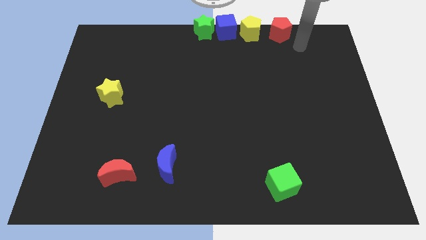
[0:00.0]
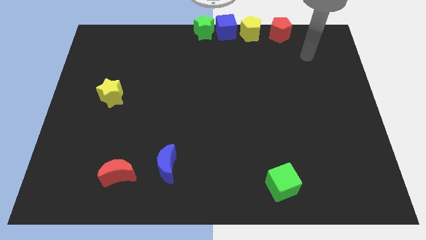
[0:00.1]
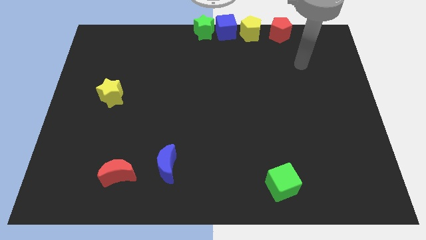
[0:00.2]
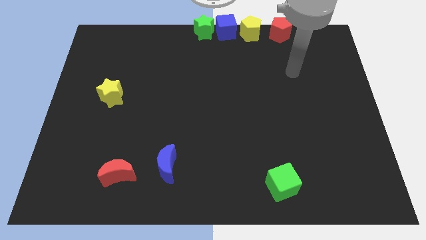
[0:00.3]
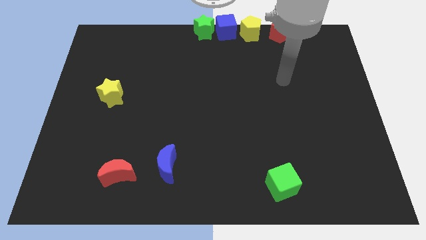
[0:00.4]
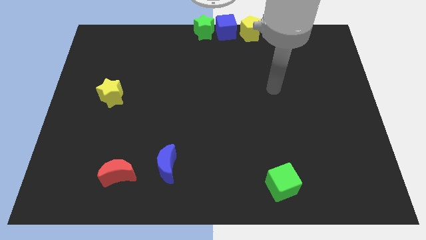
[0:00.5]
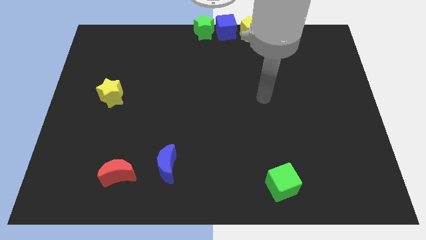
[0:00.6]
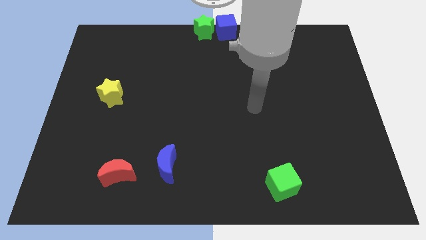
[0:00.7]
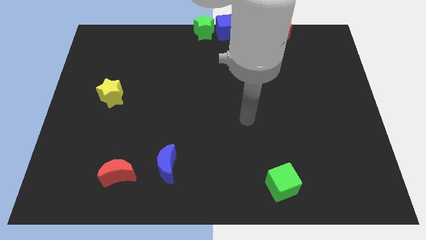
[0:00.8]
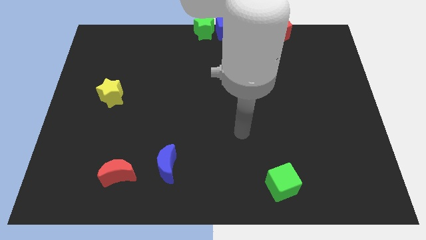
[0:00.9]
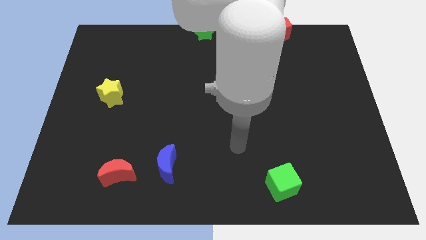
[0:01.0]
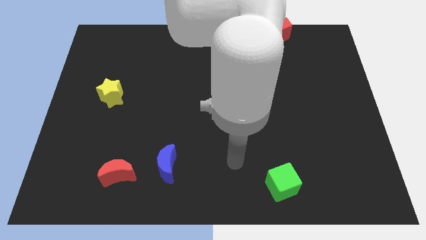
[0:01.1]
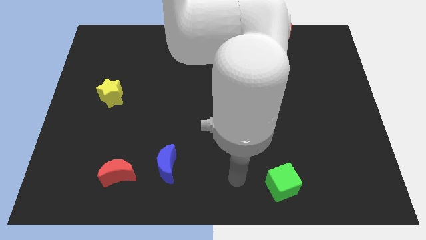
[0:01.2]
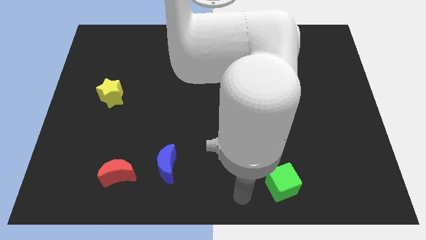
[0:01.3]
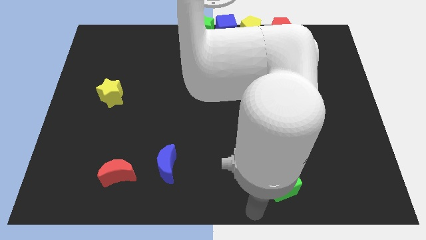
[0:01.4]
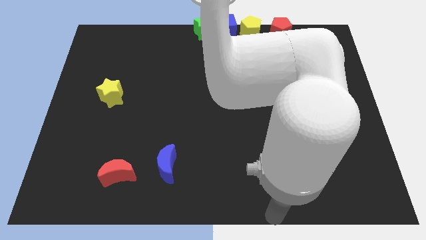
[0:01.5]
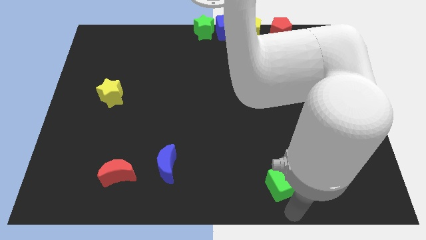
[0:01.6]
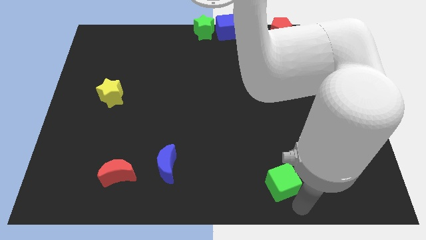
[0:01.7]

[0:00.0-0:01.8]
move your arm away from the horizontal line

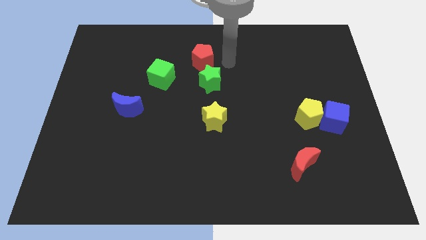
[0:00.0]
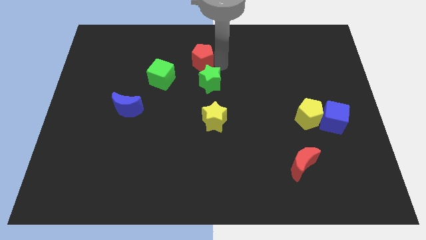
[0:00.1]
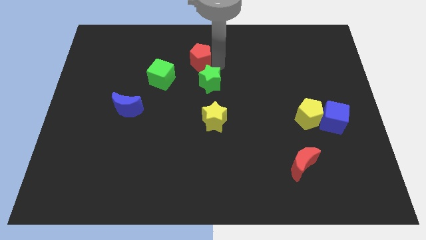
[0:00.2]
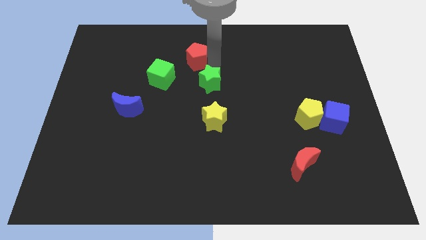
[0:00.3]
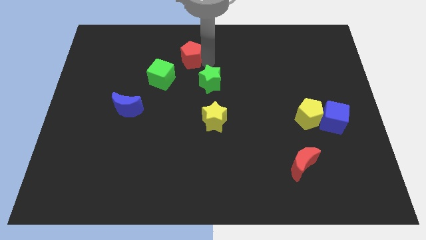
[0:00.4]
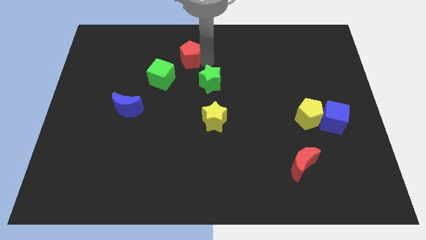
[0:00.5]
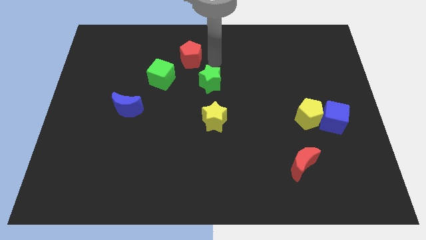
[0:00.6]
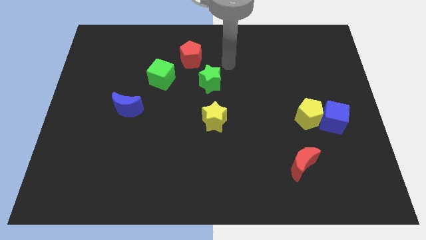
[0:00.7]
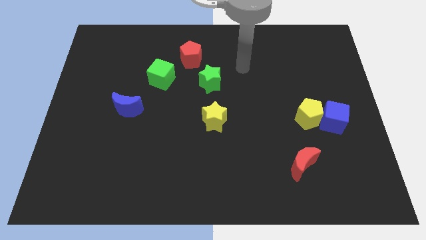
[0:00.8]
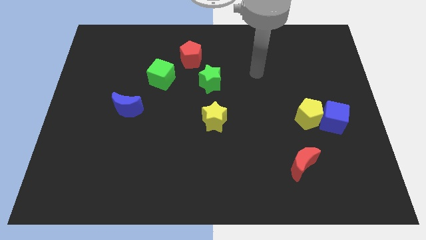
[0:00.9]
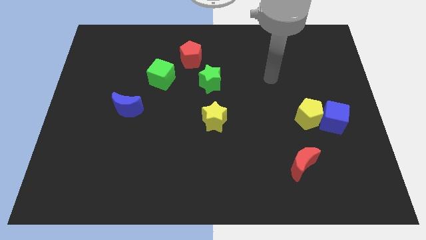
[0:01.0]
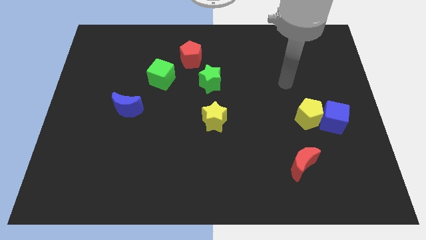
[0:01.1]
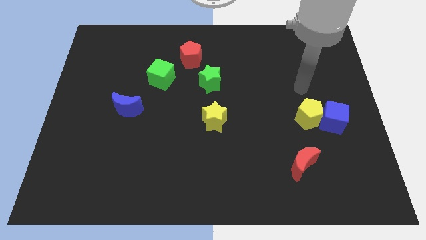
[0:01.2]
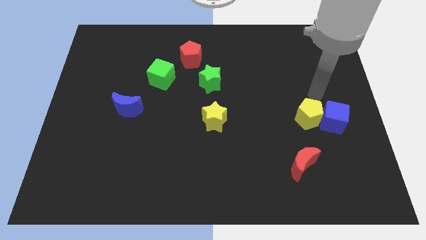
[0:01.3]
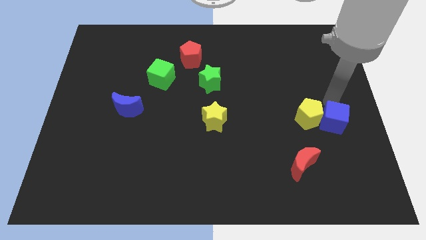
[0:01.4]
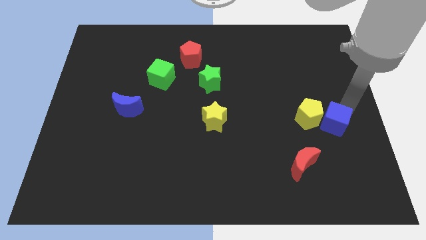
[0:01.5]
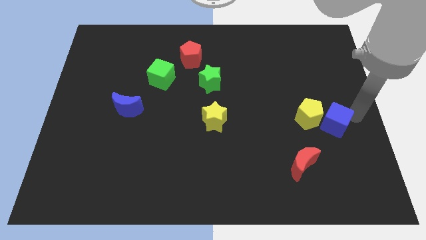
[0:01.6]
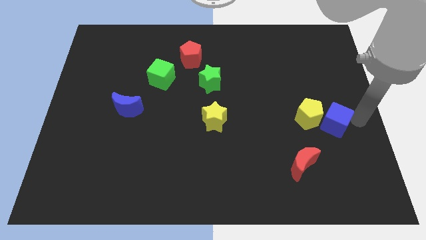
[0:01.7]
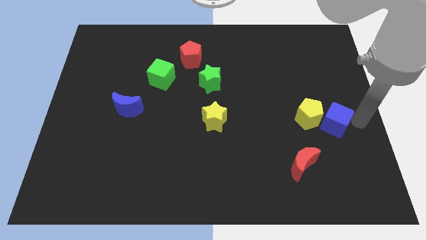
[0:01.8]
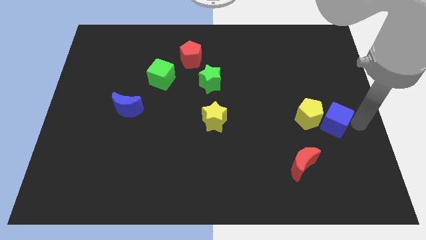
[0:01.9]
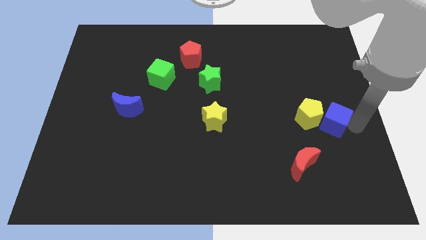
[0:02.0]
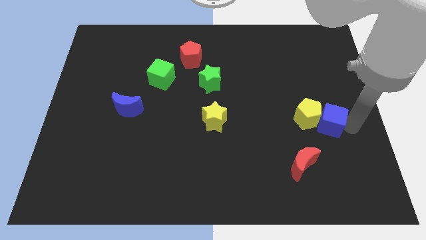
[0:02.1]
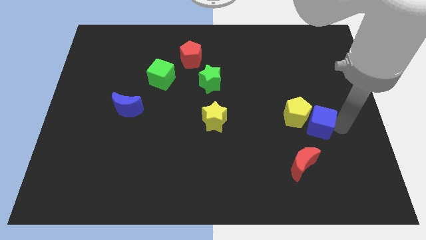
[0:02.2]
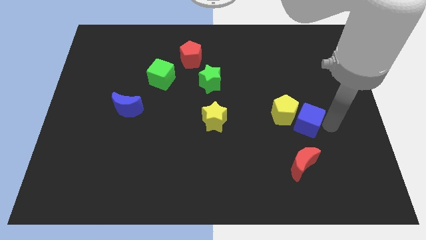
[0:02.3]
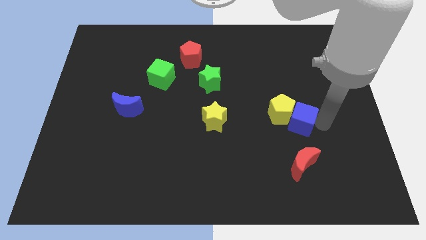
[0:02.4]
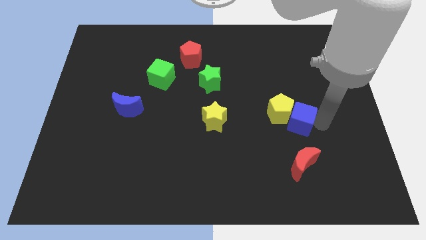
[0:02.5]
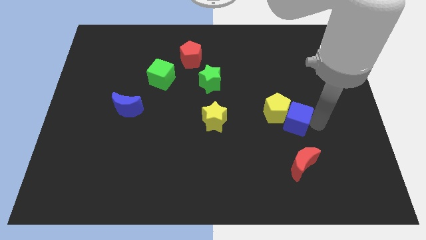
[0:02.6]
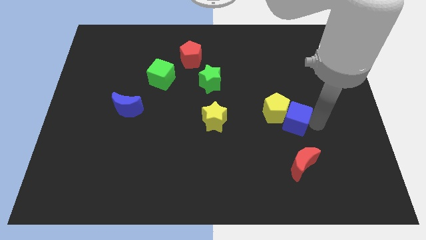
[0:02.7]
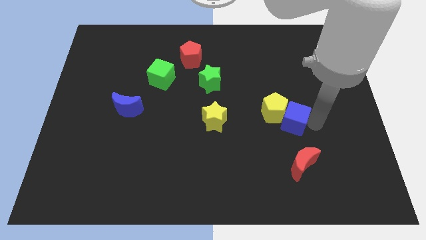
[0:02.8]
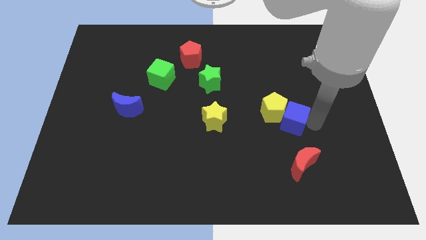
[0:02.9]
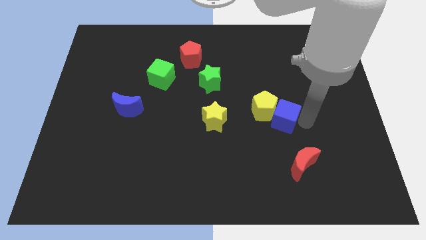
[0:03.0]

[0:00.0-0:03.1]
push blue cube above red crescent

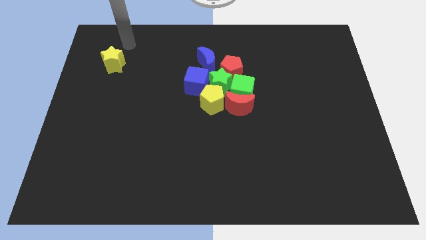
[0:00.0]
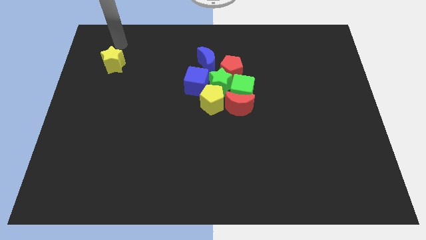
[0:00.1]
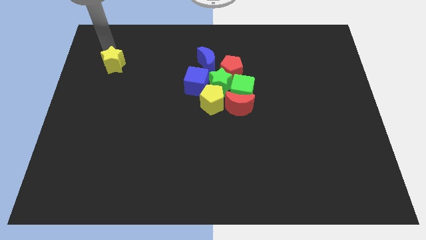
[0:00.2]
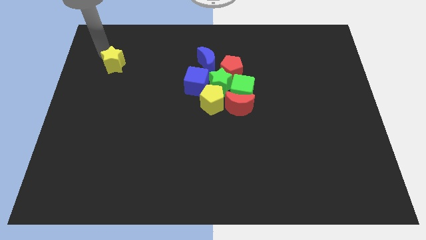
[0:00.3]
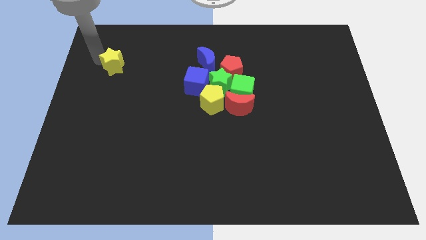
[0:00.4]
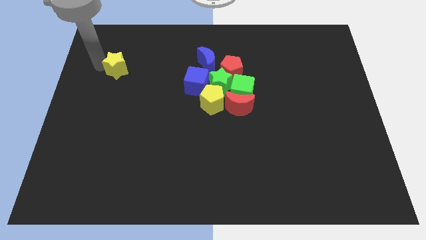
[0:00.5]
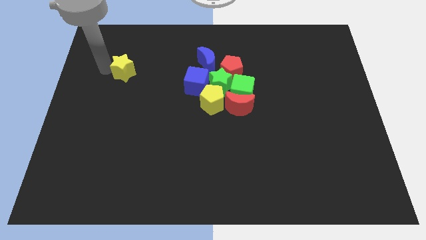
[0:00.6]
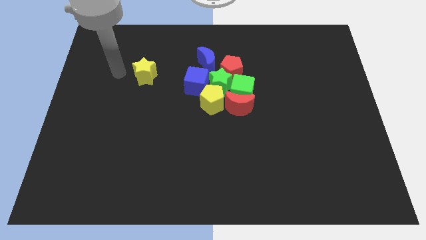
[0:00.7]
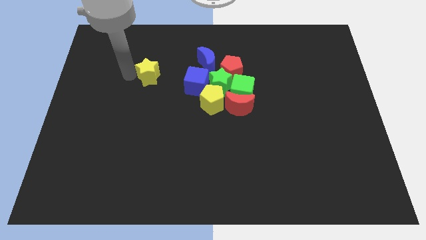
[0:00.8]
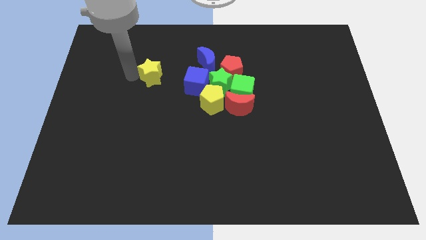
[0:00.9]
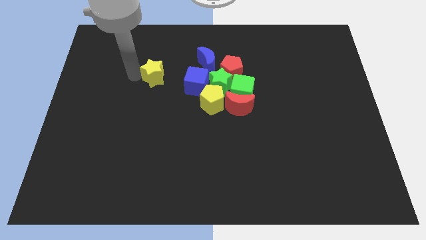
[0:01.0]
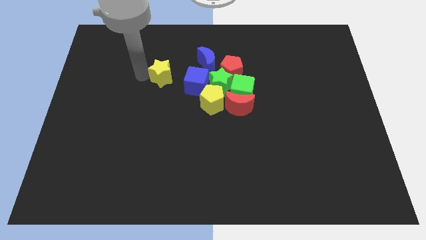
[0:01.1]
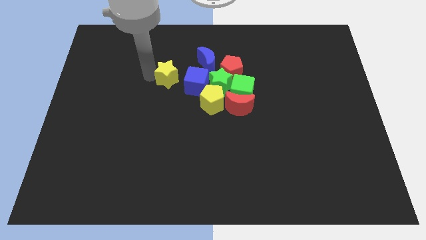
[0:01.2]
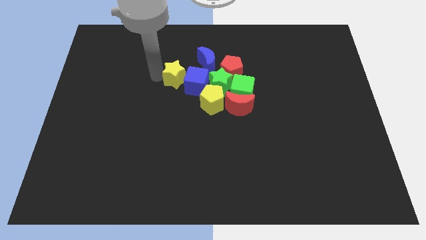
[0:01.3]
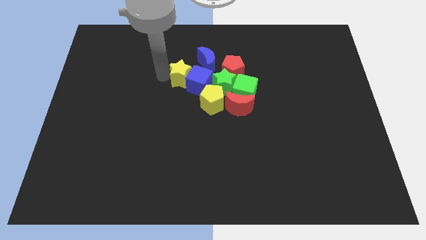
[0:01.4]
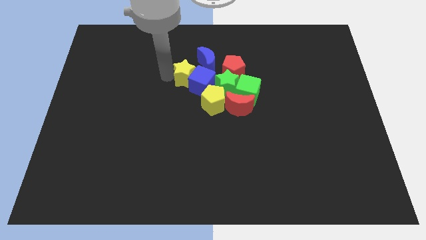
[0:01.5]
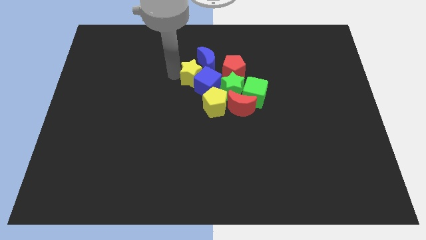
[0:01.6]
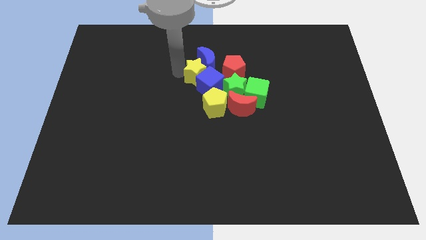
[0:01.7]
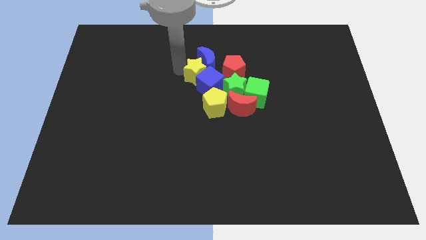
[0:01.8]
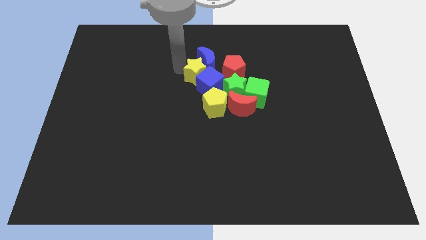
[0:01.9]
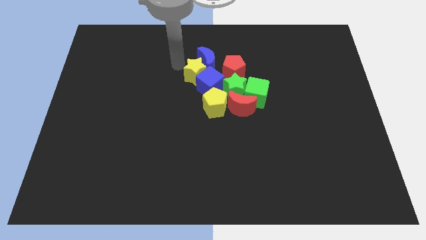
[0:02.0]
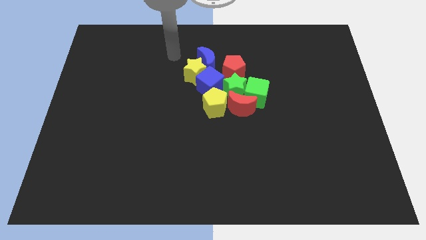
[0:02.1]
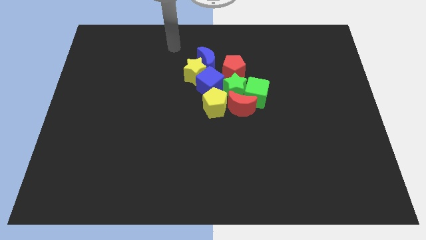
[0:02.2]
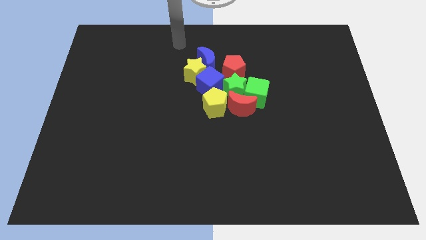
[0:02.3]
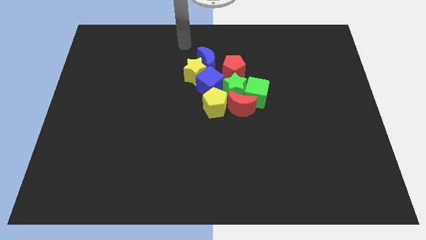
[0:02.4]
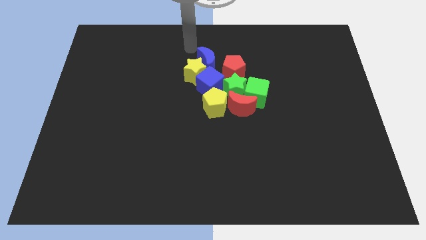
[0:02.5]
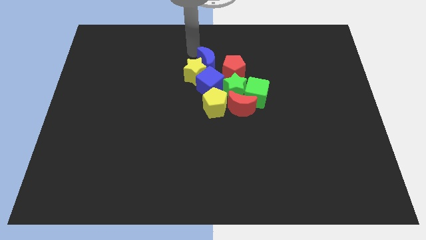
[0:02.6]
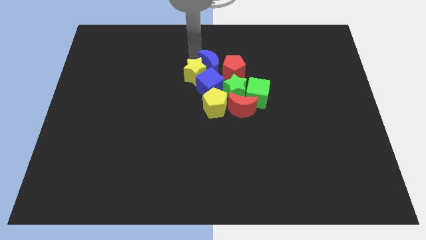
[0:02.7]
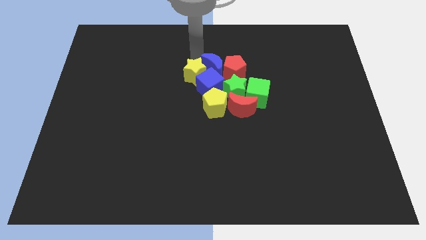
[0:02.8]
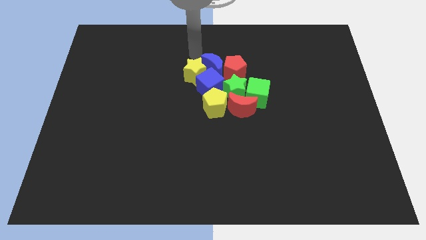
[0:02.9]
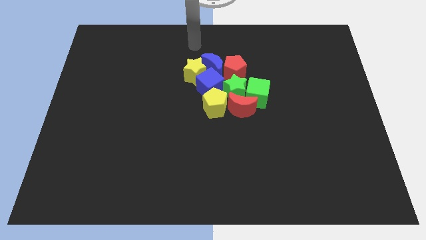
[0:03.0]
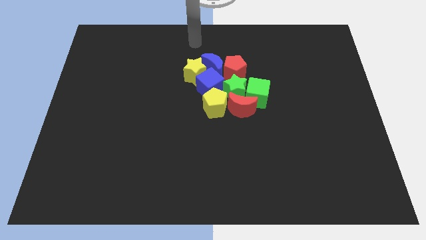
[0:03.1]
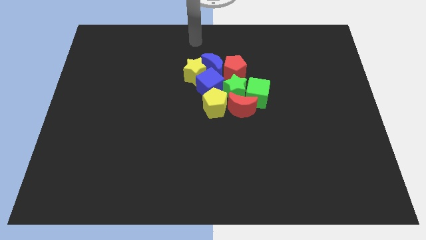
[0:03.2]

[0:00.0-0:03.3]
move the yellow star into blue blocks

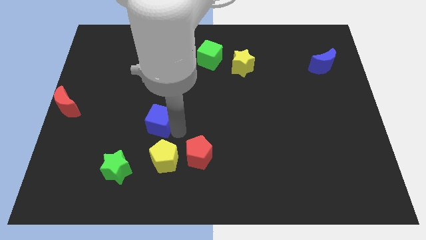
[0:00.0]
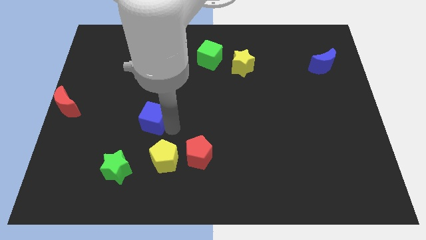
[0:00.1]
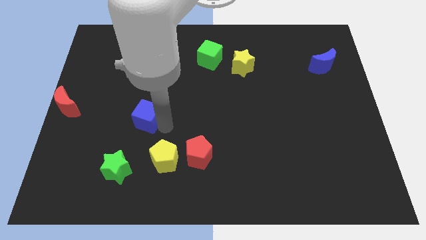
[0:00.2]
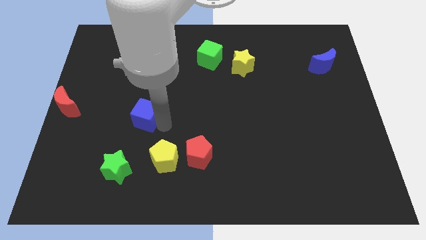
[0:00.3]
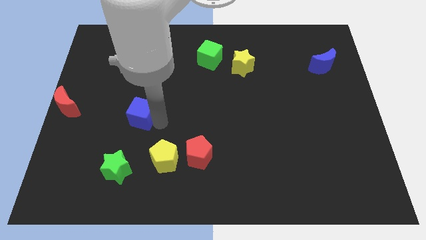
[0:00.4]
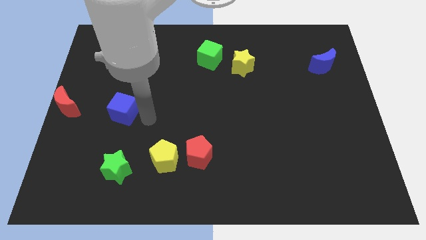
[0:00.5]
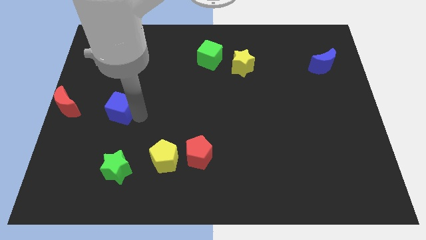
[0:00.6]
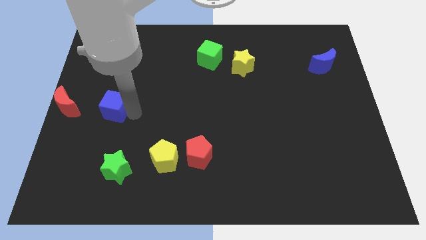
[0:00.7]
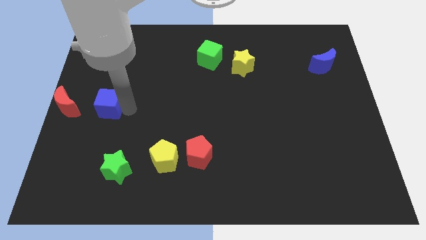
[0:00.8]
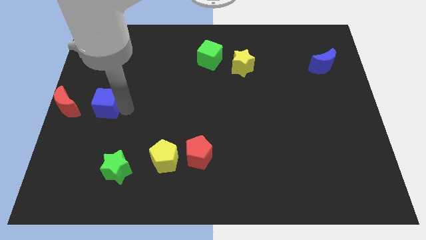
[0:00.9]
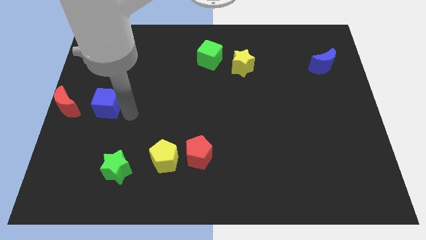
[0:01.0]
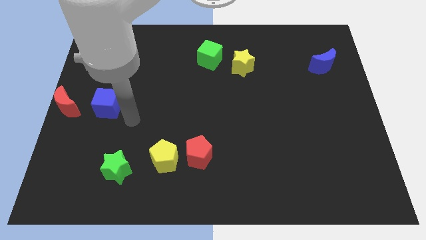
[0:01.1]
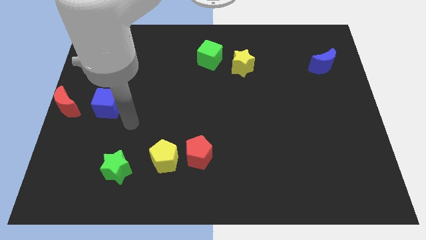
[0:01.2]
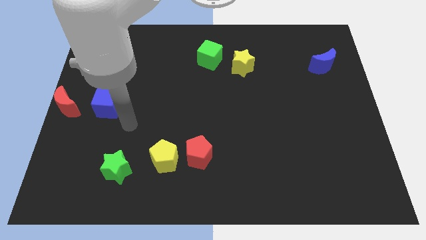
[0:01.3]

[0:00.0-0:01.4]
move the blue cube to the right side of the red crescent
